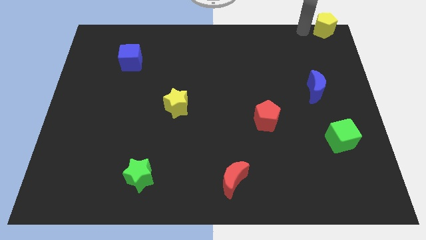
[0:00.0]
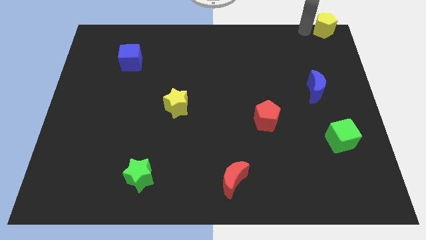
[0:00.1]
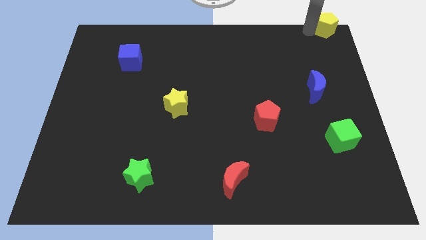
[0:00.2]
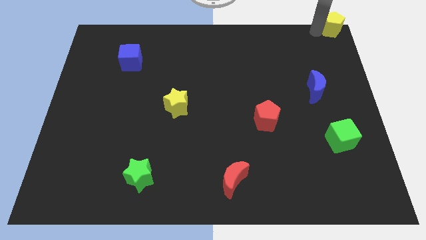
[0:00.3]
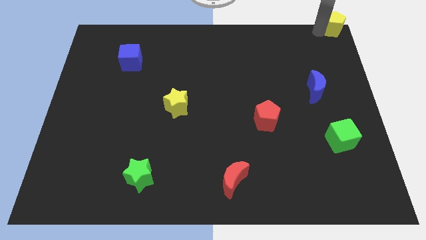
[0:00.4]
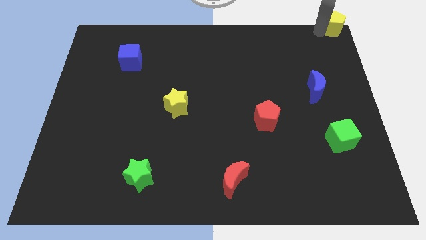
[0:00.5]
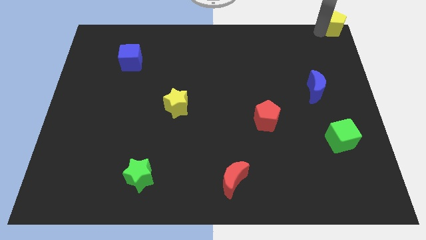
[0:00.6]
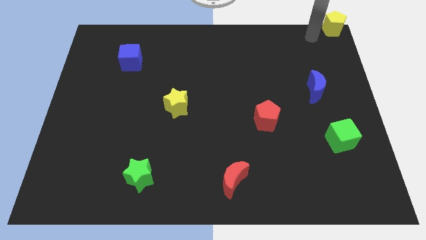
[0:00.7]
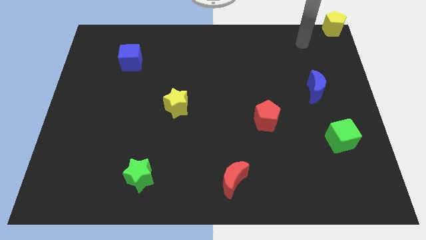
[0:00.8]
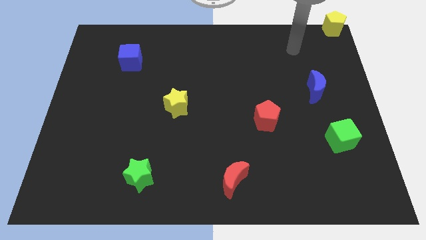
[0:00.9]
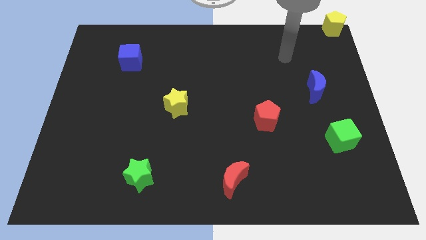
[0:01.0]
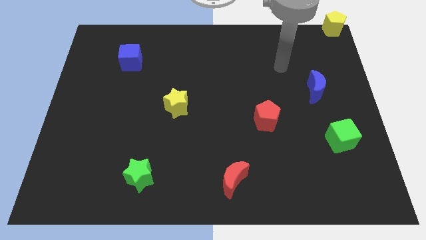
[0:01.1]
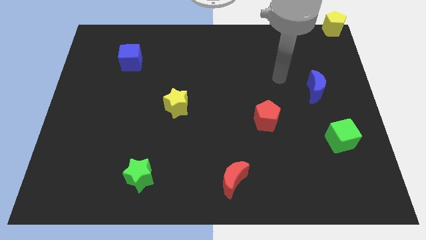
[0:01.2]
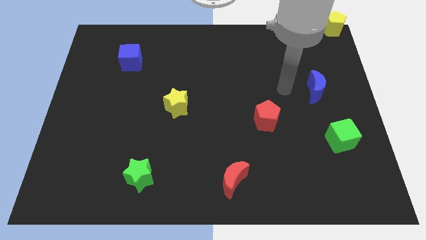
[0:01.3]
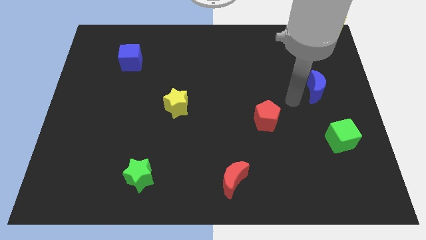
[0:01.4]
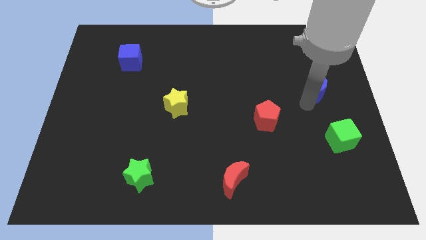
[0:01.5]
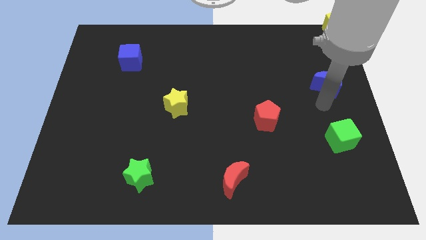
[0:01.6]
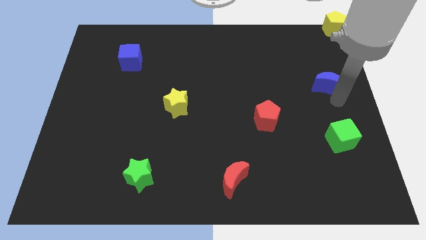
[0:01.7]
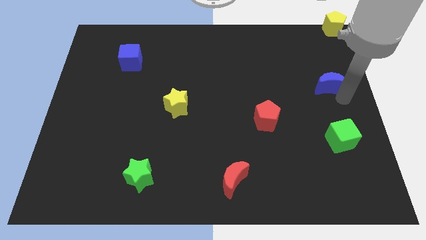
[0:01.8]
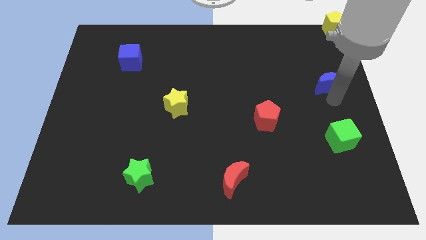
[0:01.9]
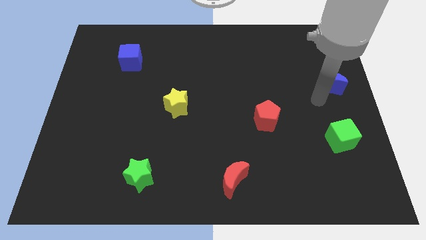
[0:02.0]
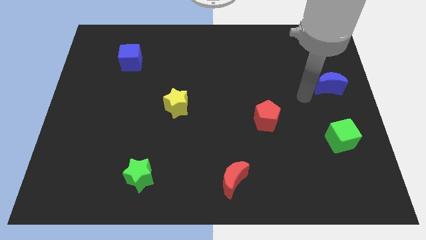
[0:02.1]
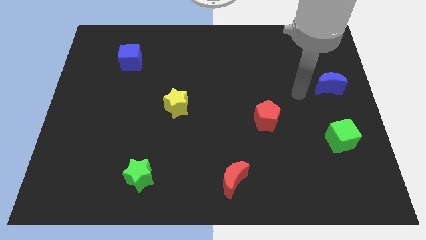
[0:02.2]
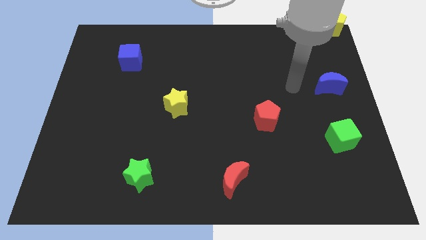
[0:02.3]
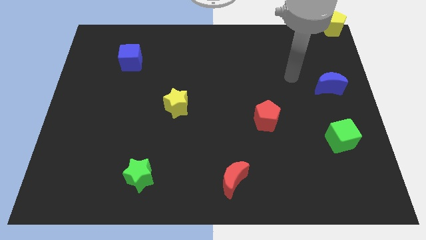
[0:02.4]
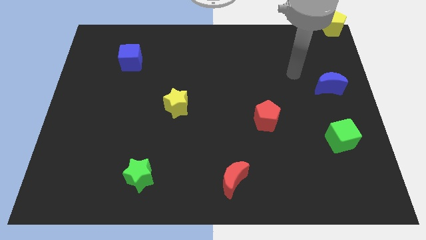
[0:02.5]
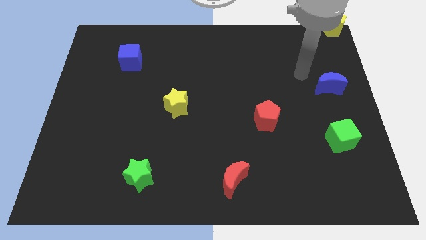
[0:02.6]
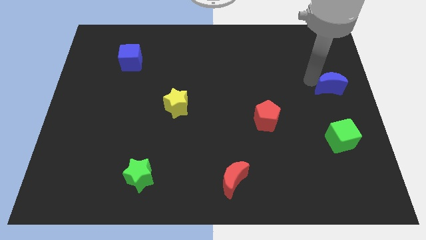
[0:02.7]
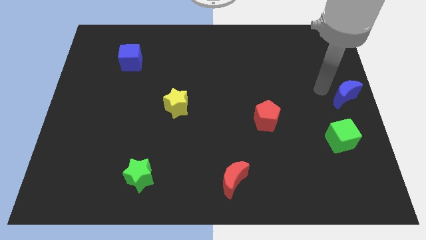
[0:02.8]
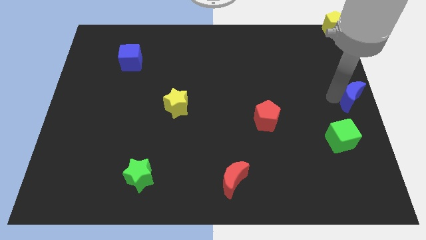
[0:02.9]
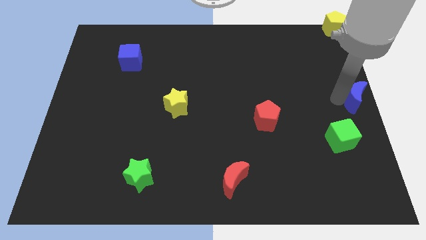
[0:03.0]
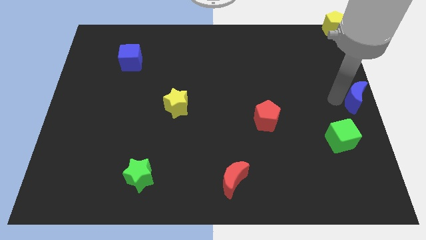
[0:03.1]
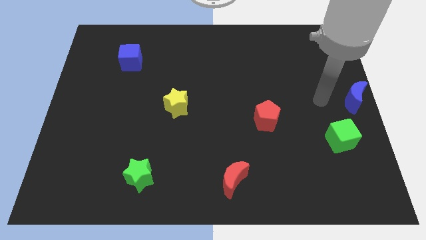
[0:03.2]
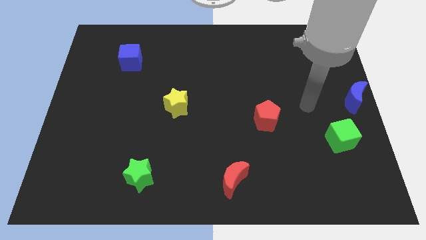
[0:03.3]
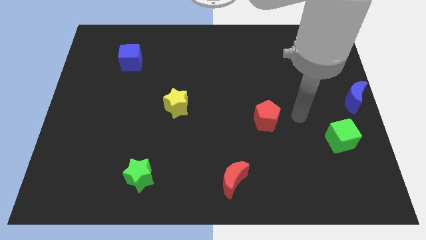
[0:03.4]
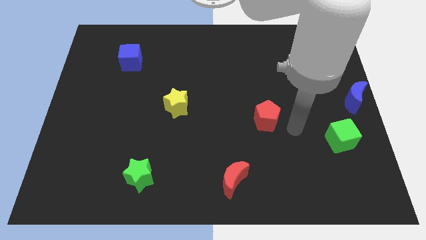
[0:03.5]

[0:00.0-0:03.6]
place the blue moon to the center right side

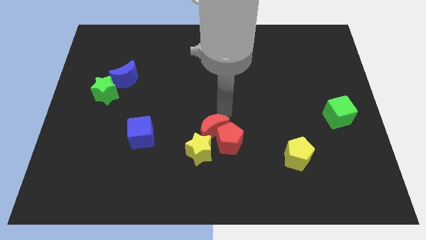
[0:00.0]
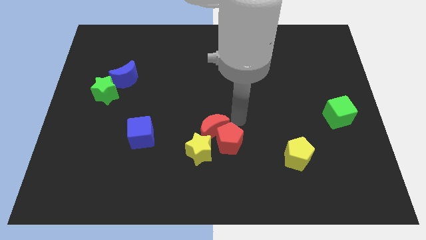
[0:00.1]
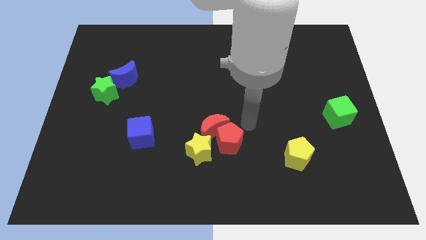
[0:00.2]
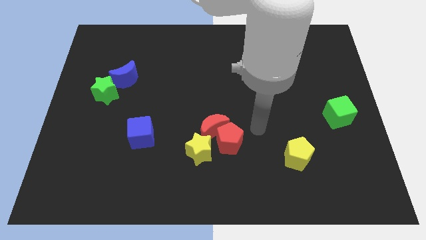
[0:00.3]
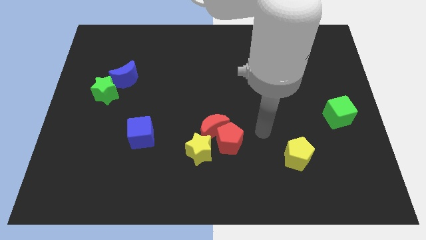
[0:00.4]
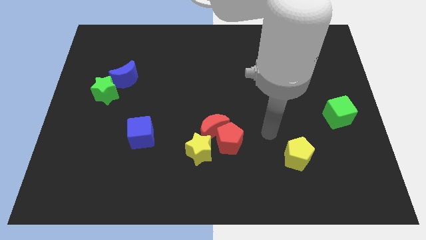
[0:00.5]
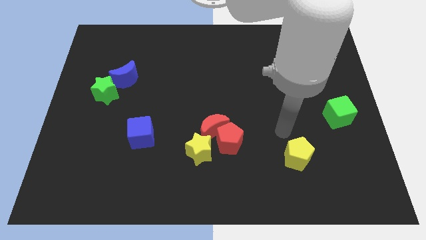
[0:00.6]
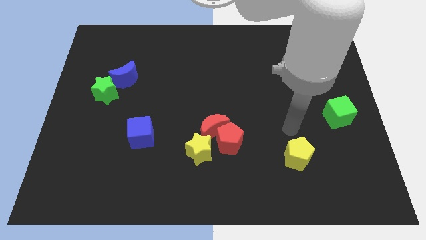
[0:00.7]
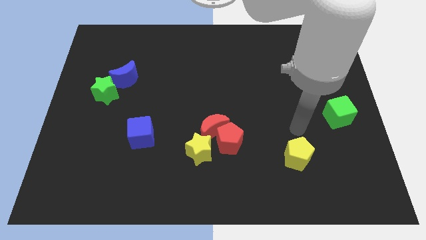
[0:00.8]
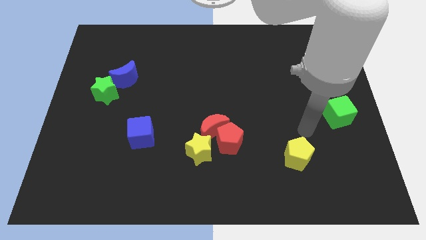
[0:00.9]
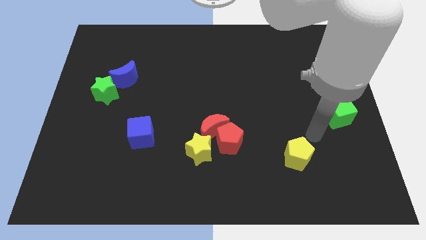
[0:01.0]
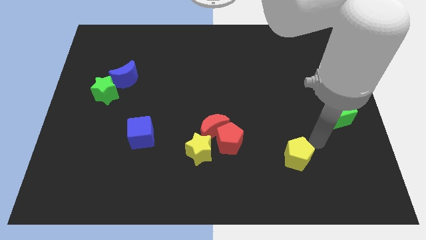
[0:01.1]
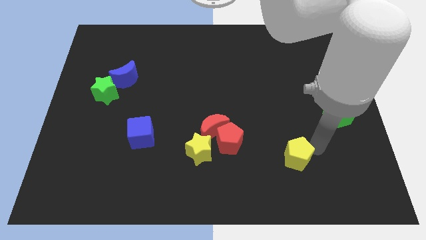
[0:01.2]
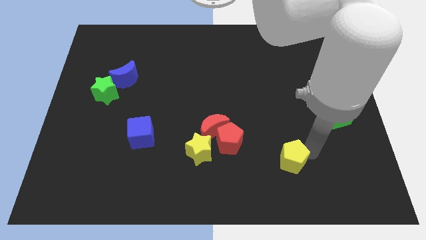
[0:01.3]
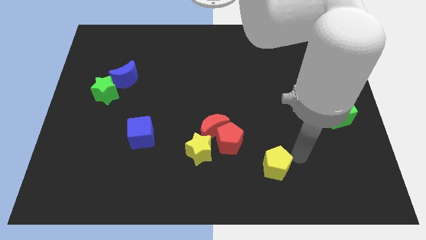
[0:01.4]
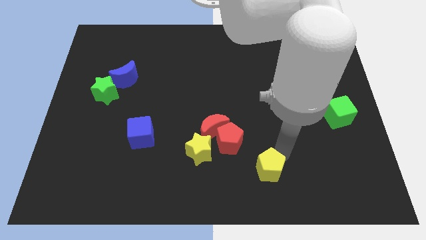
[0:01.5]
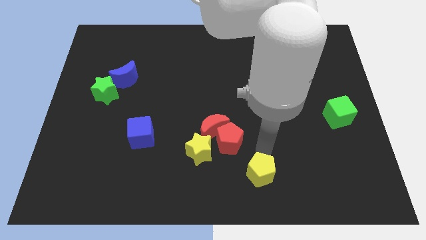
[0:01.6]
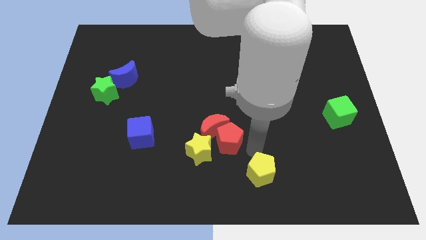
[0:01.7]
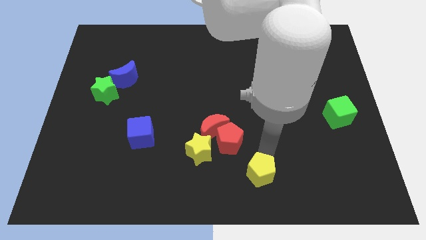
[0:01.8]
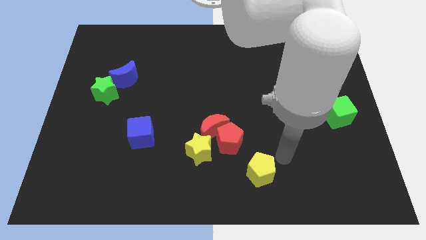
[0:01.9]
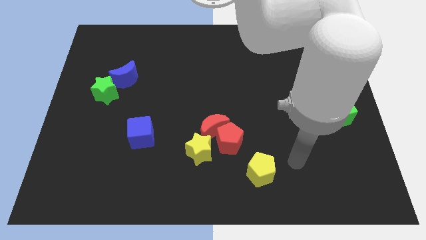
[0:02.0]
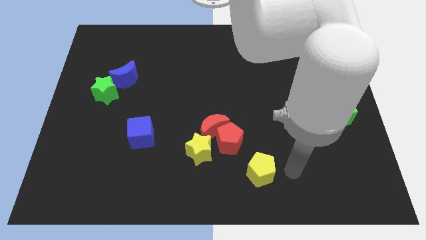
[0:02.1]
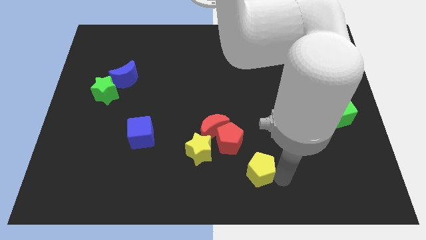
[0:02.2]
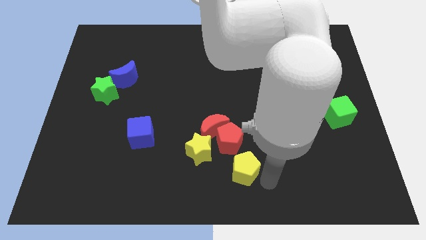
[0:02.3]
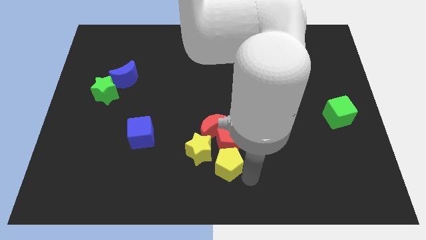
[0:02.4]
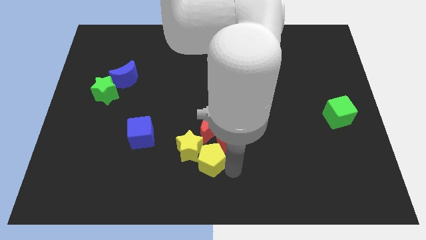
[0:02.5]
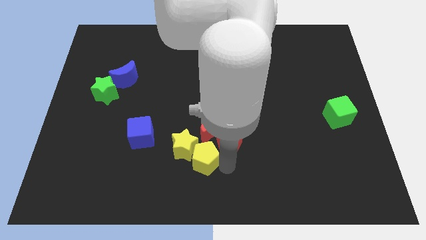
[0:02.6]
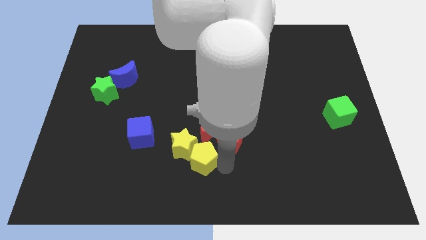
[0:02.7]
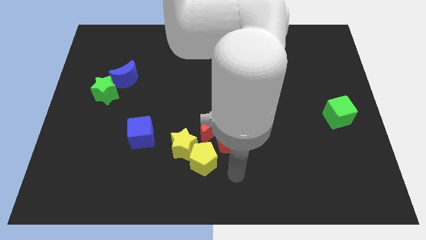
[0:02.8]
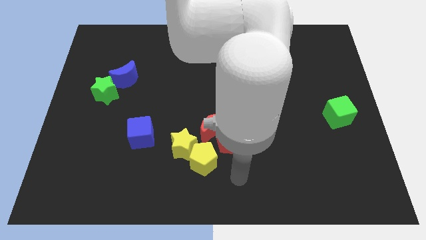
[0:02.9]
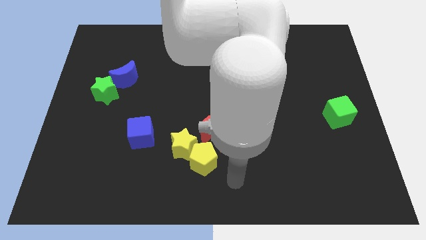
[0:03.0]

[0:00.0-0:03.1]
push the yellow pentagon into the yellow star

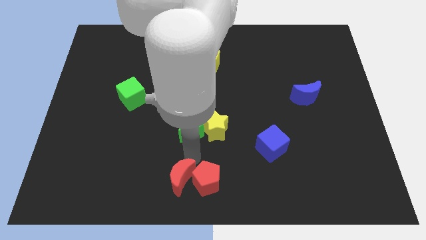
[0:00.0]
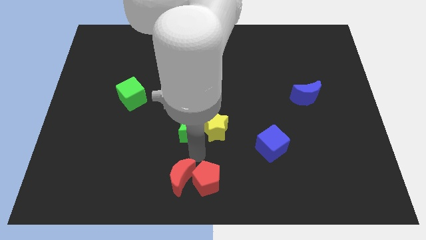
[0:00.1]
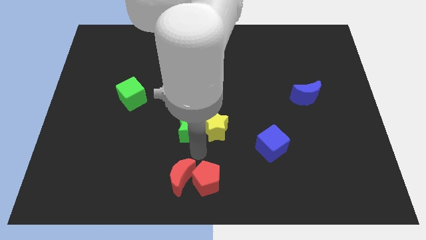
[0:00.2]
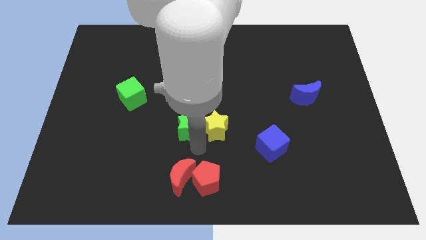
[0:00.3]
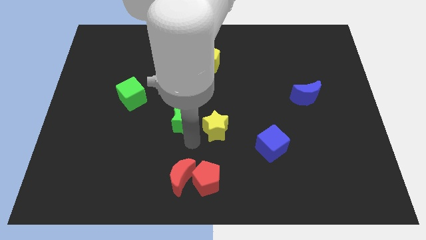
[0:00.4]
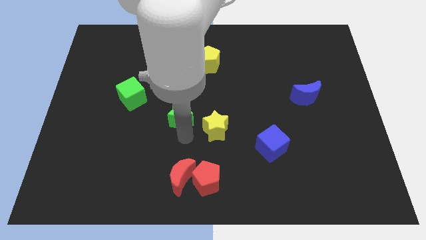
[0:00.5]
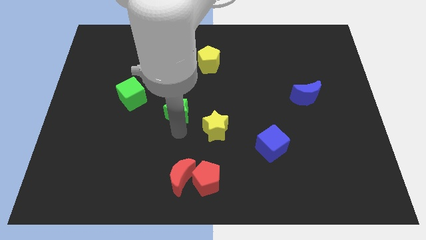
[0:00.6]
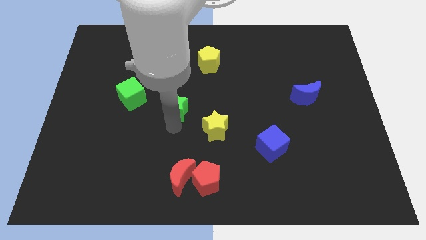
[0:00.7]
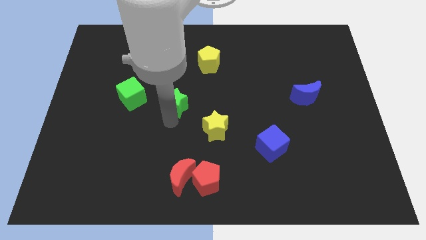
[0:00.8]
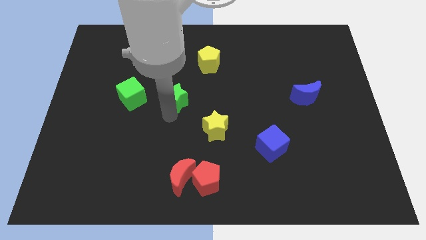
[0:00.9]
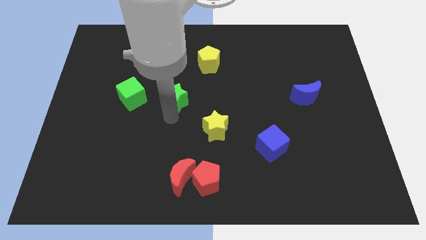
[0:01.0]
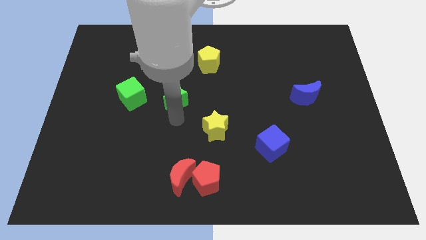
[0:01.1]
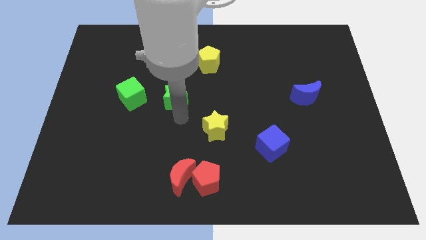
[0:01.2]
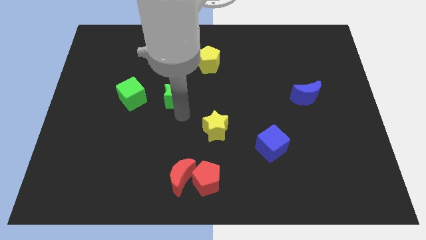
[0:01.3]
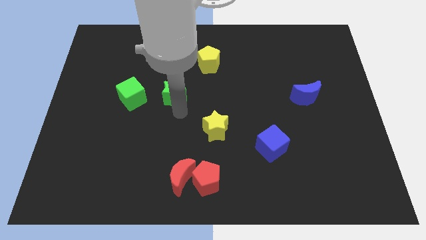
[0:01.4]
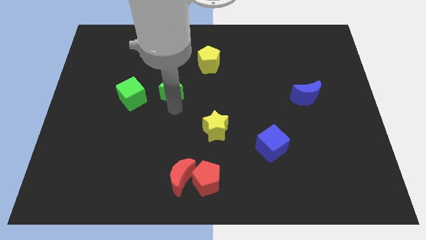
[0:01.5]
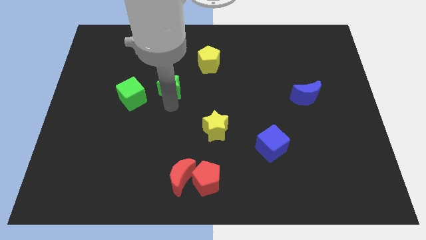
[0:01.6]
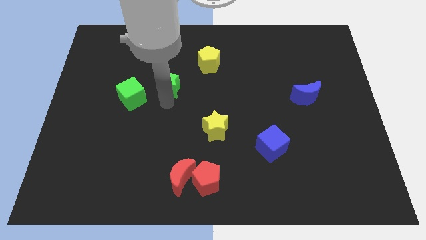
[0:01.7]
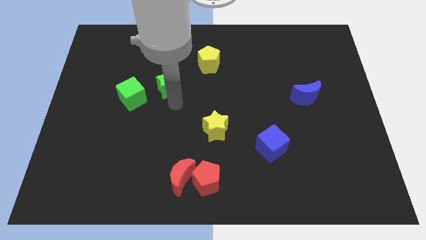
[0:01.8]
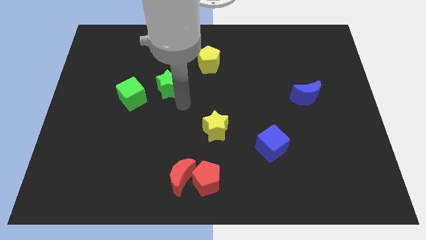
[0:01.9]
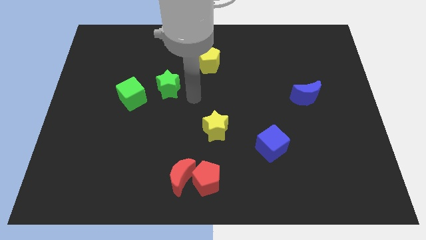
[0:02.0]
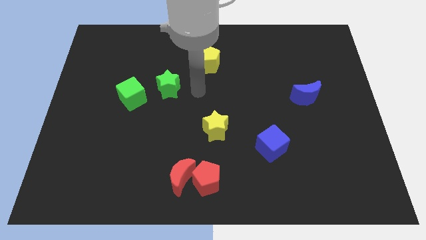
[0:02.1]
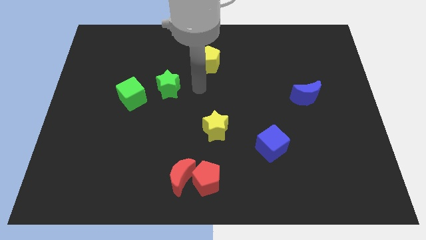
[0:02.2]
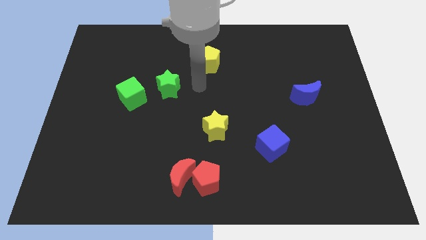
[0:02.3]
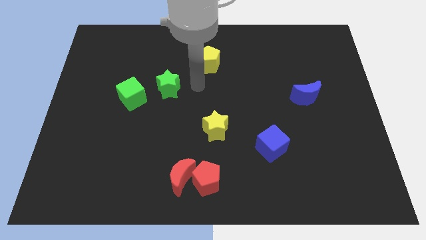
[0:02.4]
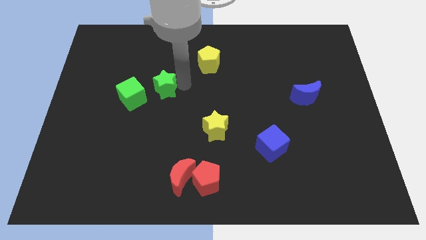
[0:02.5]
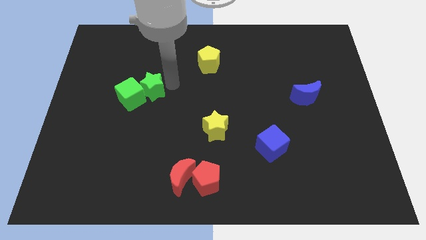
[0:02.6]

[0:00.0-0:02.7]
push green star into the green cube
